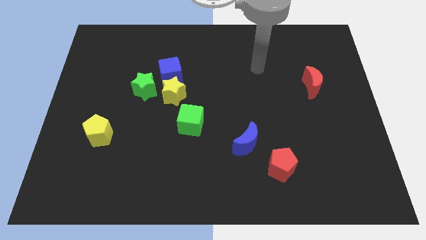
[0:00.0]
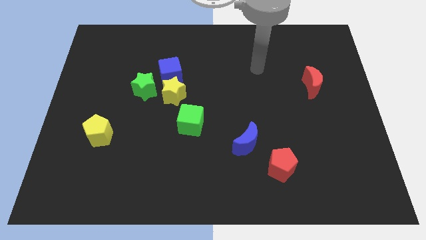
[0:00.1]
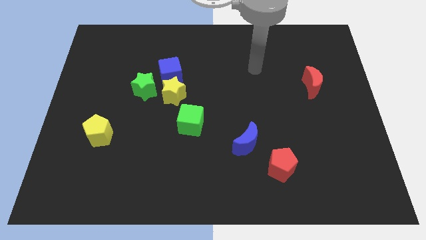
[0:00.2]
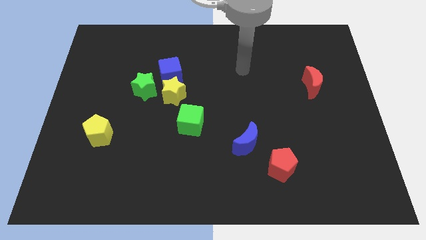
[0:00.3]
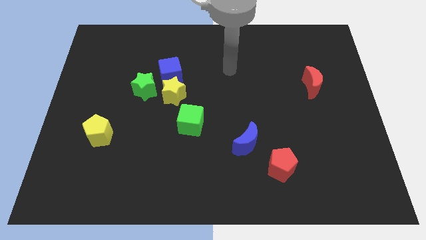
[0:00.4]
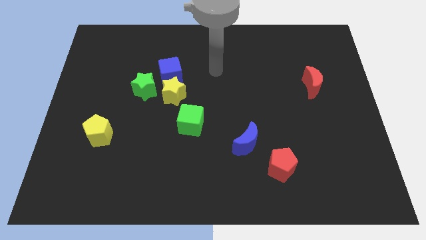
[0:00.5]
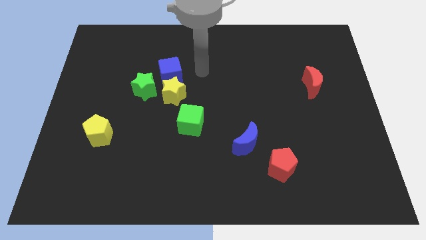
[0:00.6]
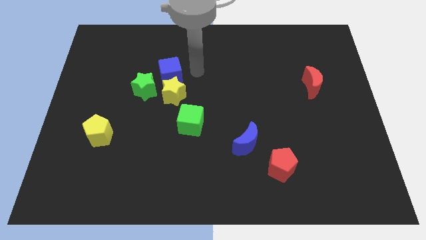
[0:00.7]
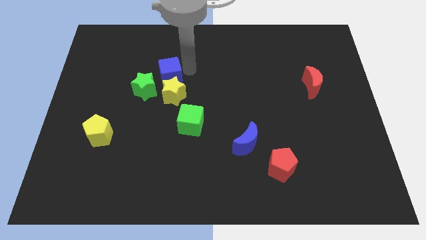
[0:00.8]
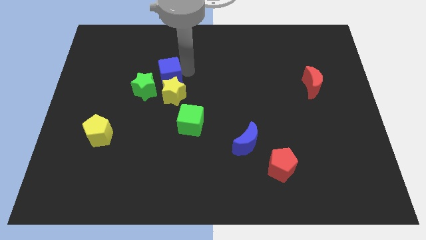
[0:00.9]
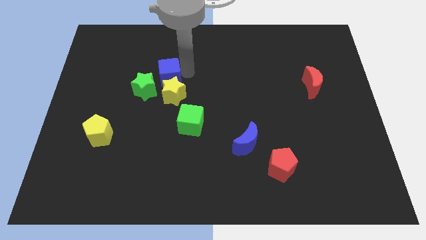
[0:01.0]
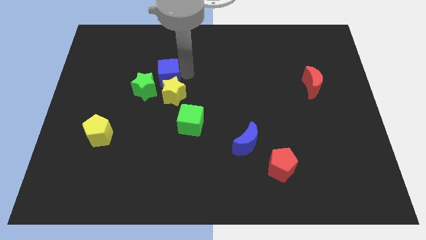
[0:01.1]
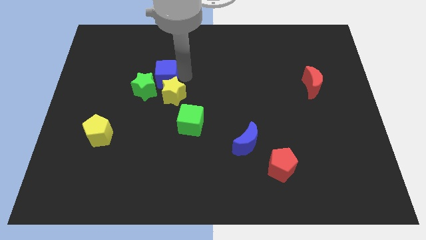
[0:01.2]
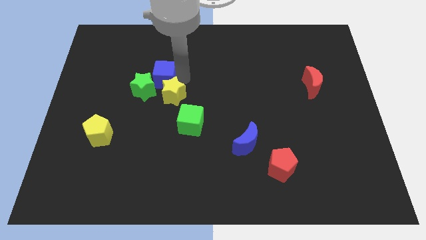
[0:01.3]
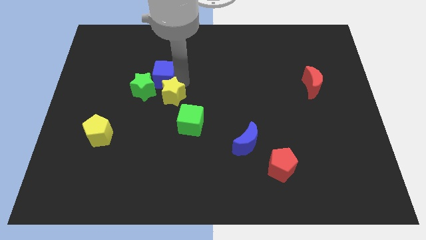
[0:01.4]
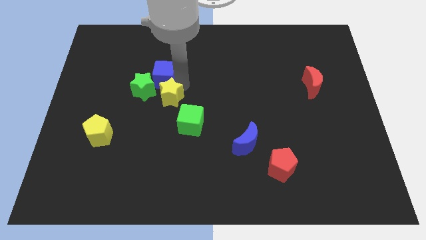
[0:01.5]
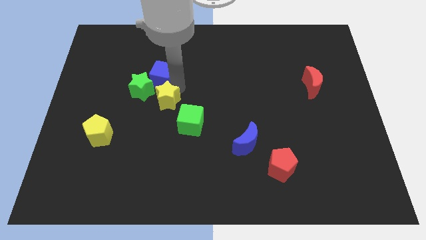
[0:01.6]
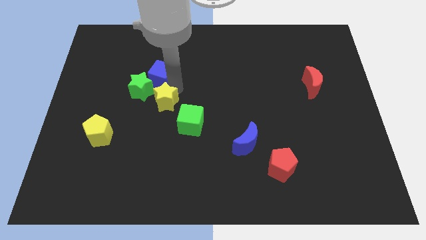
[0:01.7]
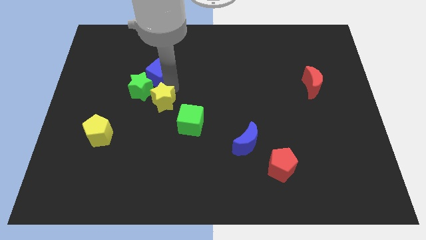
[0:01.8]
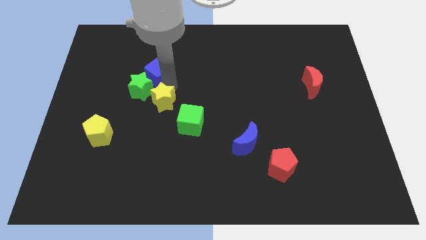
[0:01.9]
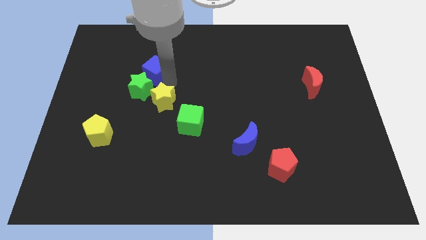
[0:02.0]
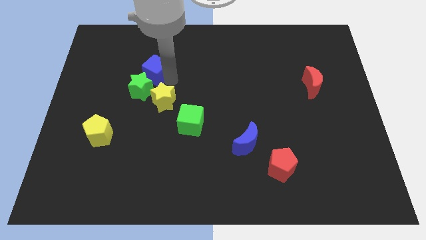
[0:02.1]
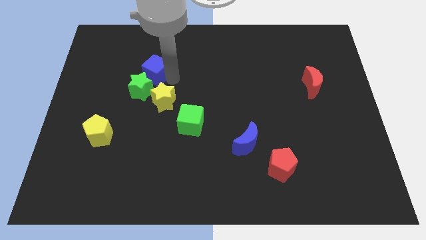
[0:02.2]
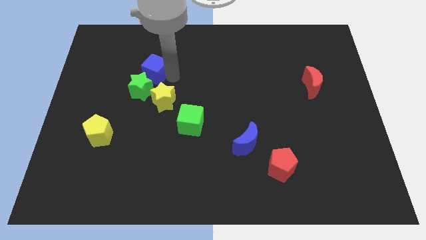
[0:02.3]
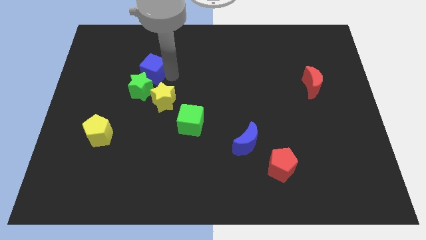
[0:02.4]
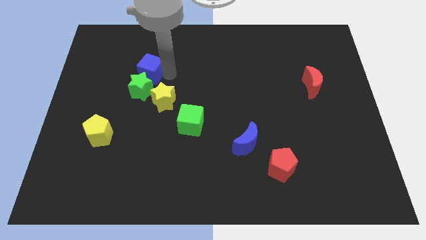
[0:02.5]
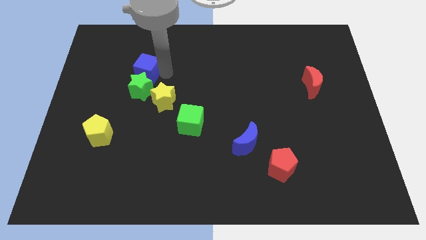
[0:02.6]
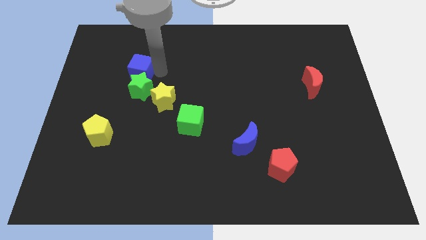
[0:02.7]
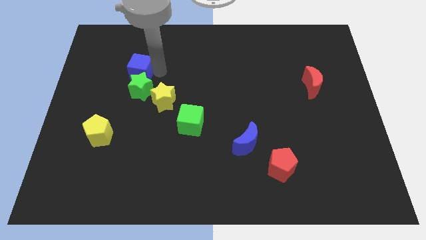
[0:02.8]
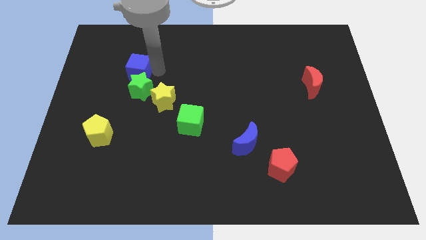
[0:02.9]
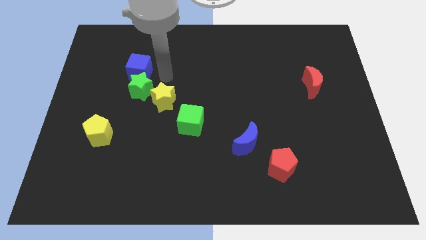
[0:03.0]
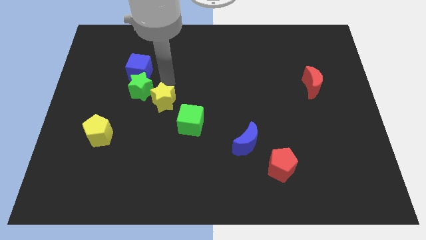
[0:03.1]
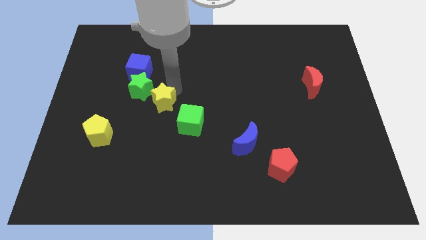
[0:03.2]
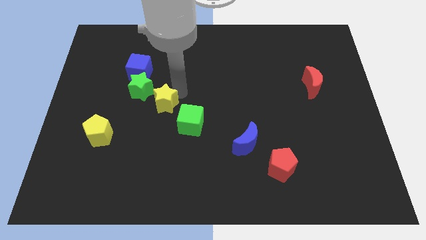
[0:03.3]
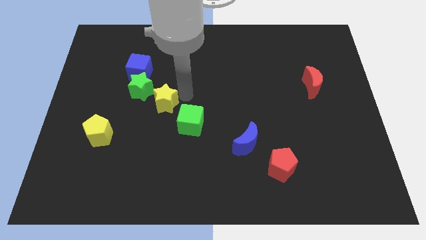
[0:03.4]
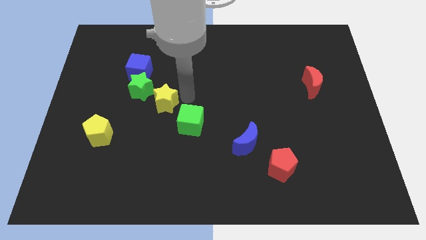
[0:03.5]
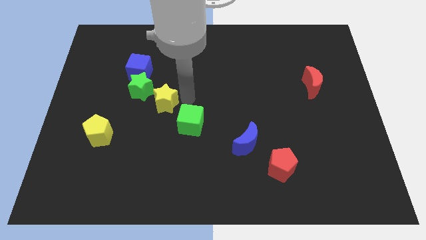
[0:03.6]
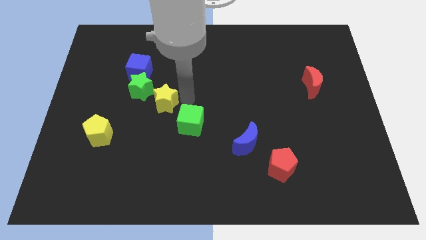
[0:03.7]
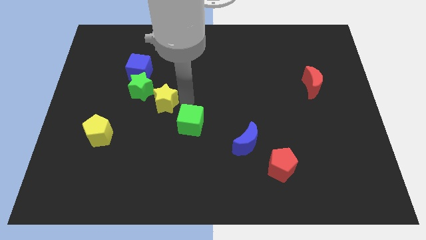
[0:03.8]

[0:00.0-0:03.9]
push the blue cube above the green star

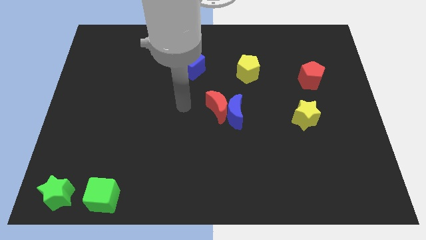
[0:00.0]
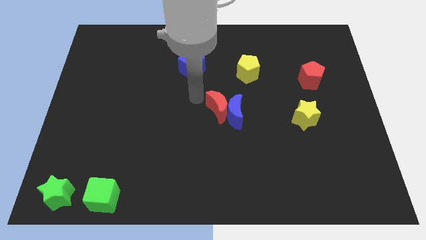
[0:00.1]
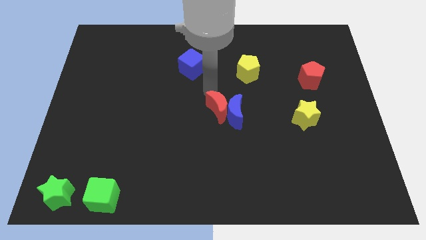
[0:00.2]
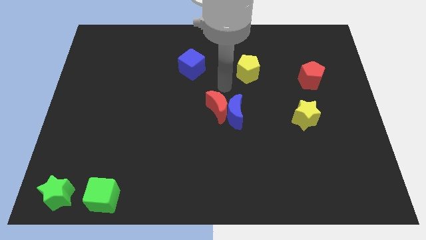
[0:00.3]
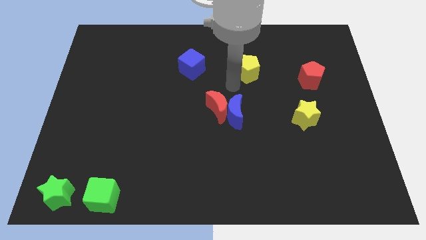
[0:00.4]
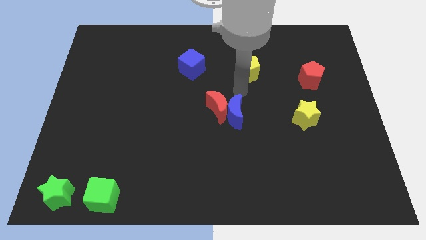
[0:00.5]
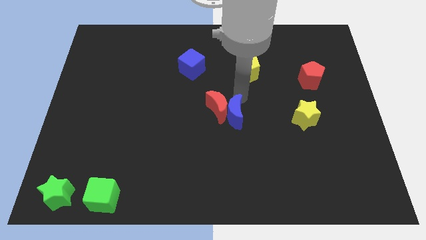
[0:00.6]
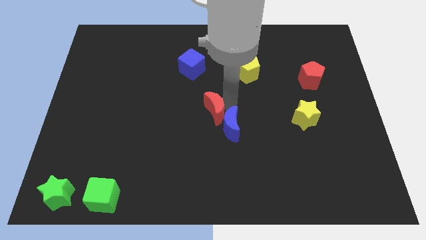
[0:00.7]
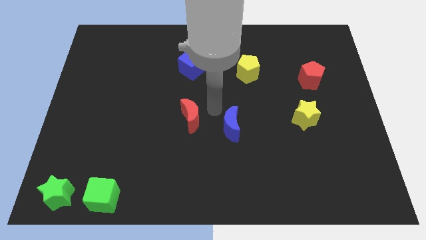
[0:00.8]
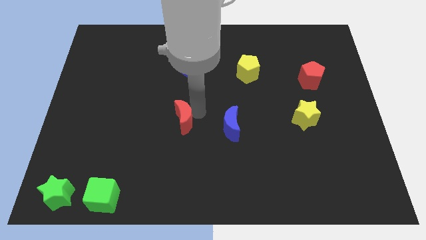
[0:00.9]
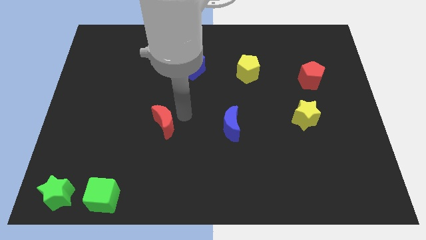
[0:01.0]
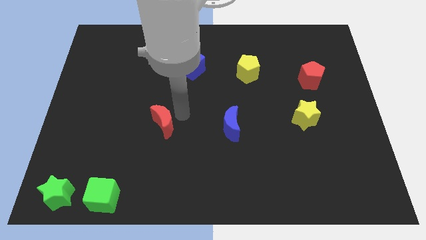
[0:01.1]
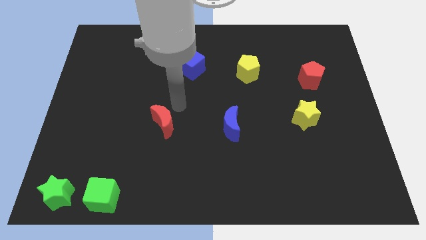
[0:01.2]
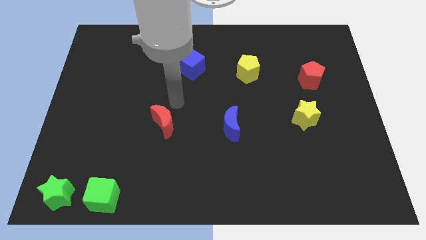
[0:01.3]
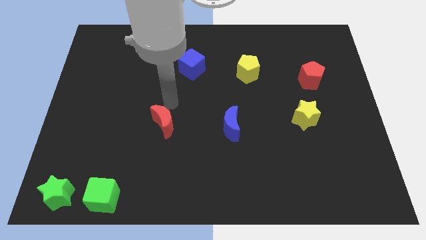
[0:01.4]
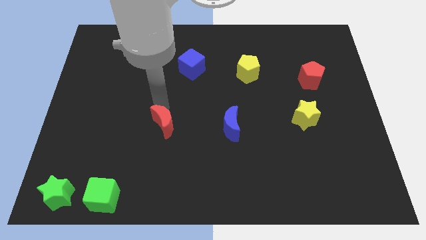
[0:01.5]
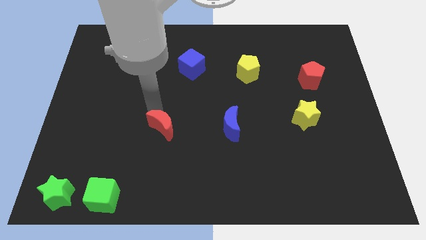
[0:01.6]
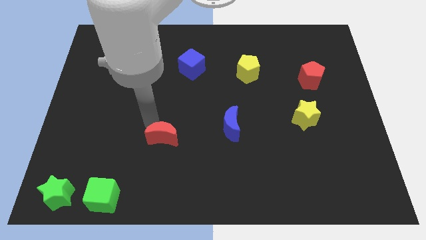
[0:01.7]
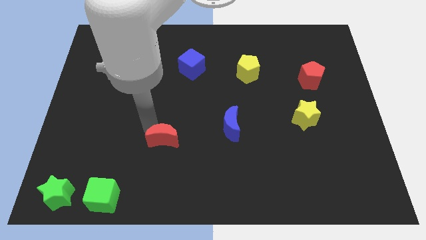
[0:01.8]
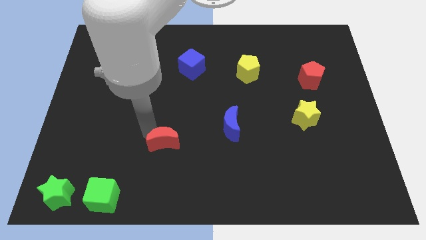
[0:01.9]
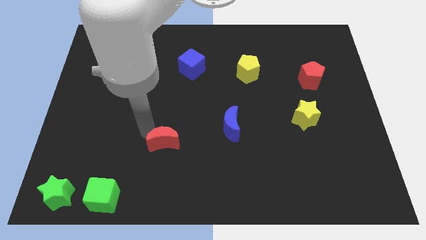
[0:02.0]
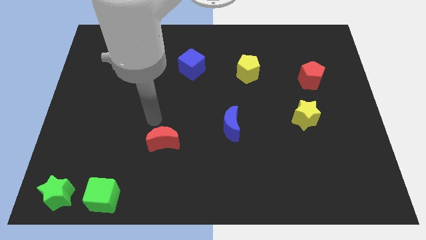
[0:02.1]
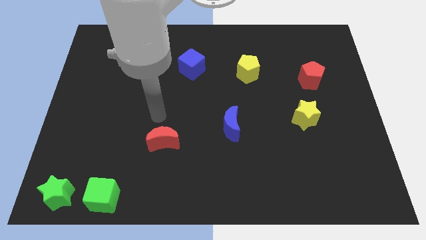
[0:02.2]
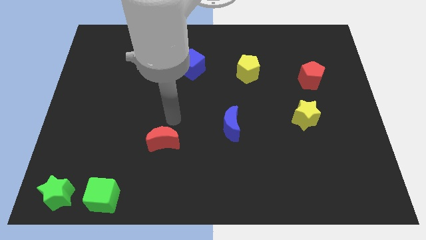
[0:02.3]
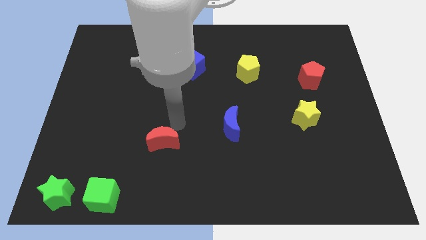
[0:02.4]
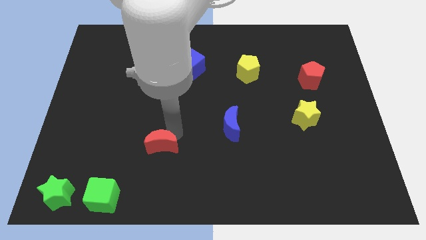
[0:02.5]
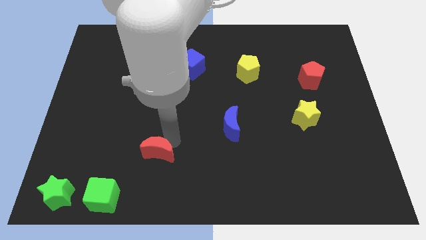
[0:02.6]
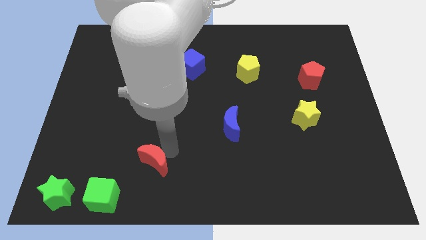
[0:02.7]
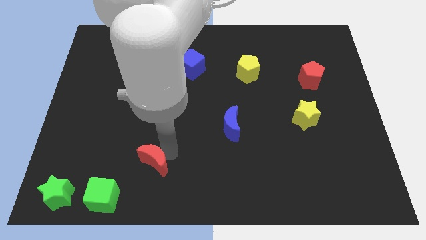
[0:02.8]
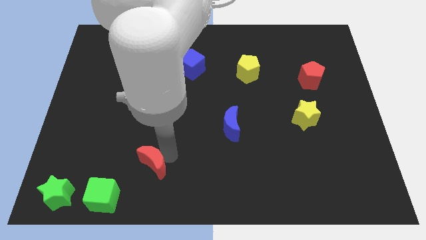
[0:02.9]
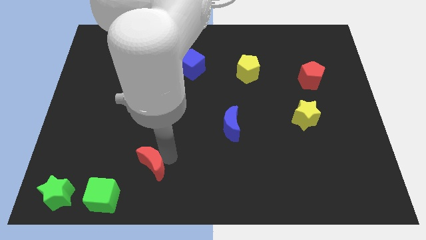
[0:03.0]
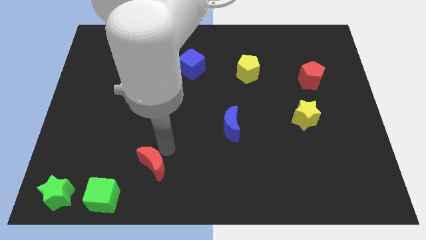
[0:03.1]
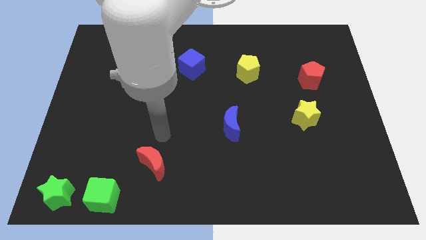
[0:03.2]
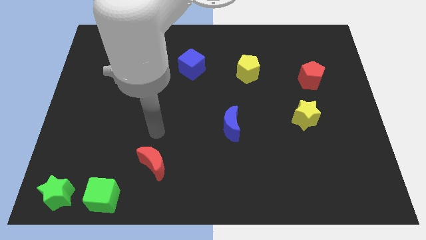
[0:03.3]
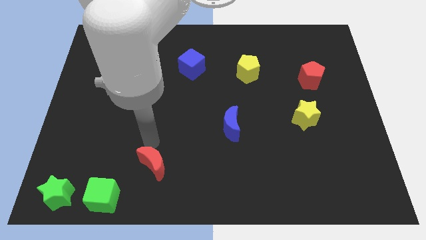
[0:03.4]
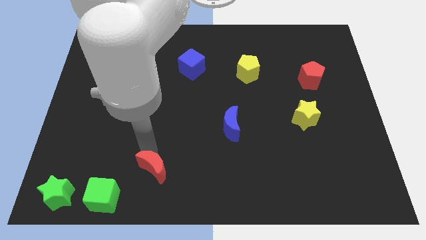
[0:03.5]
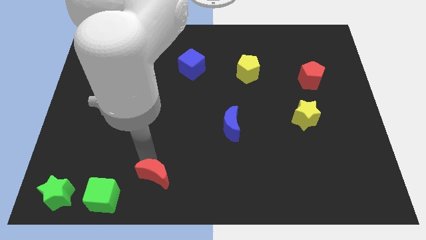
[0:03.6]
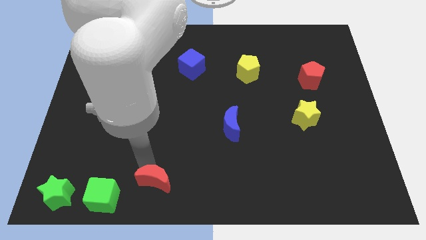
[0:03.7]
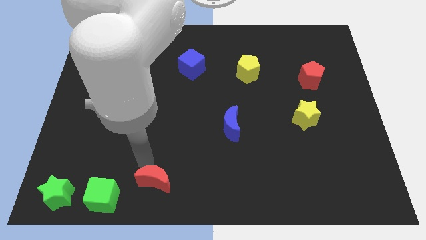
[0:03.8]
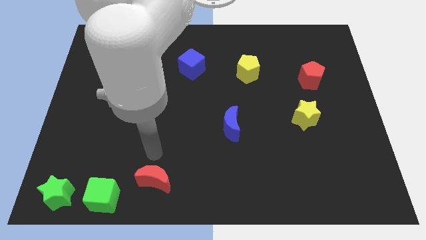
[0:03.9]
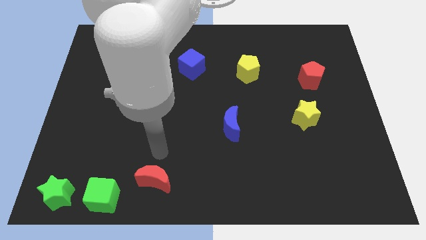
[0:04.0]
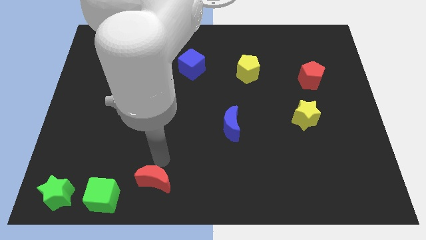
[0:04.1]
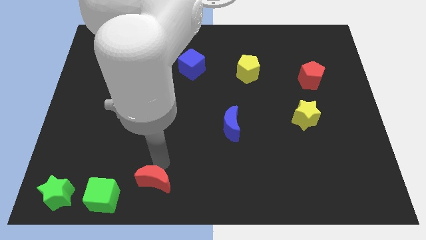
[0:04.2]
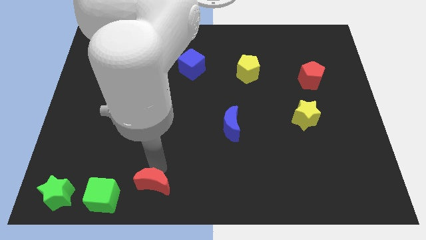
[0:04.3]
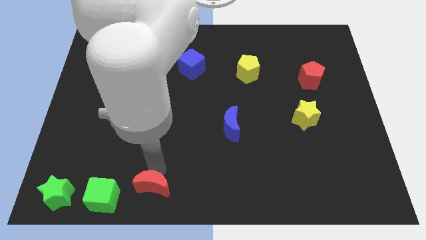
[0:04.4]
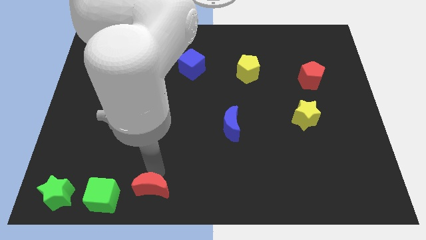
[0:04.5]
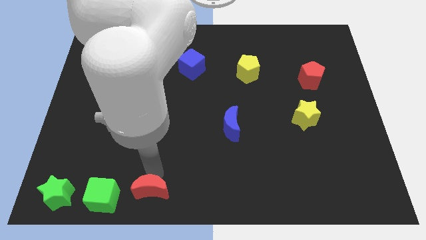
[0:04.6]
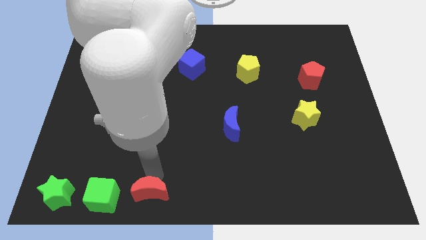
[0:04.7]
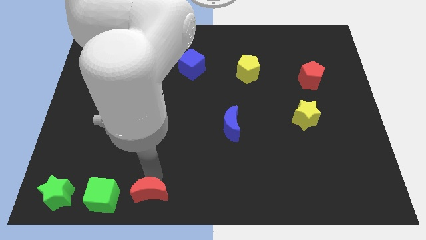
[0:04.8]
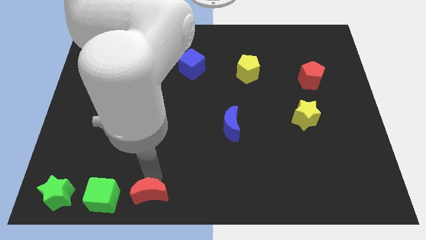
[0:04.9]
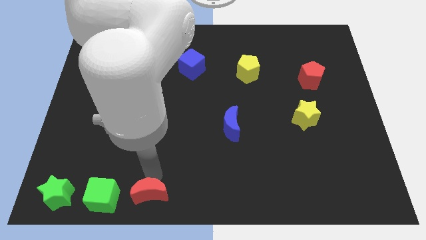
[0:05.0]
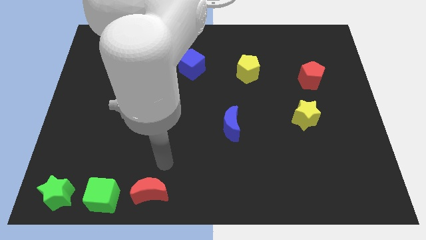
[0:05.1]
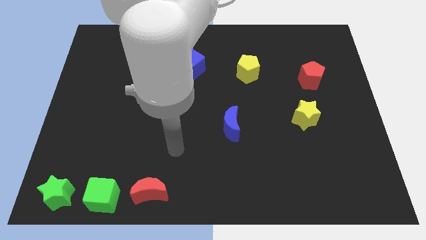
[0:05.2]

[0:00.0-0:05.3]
move the red crescent to right of the green cube
